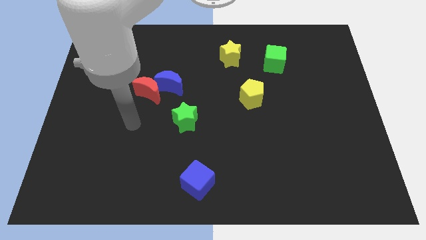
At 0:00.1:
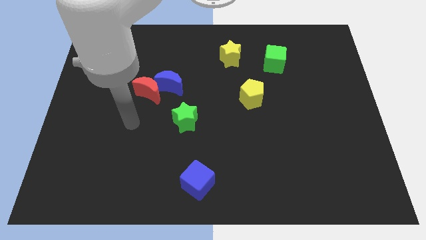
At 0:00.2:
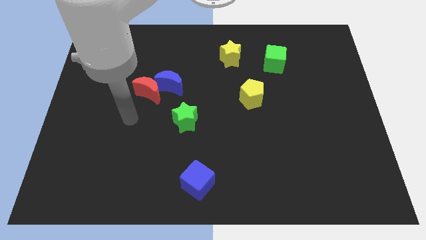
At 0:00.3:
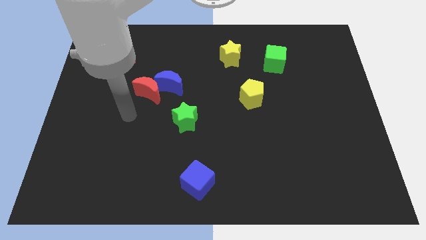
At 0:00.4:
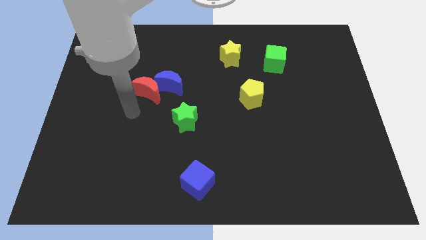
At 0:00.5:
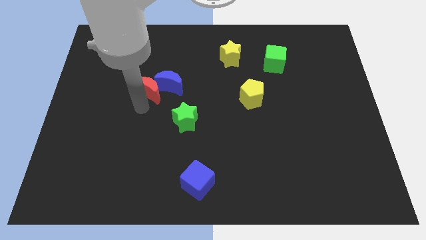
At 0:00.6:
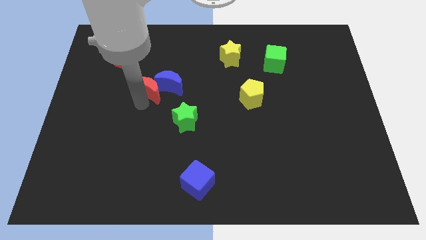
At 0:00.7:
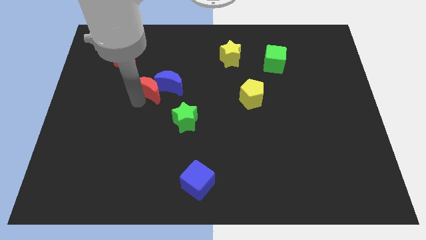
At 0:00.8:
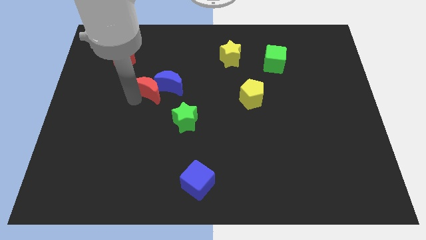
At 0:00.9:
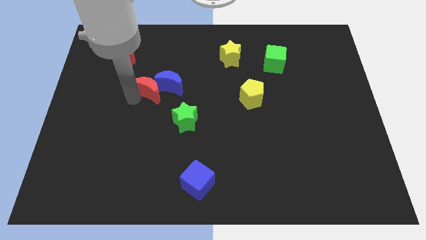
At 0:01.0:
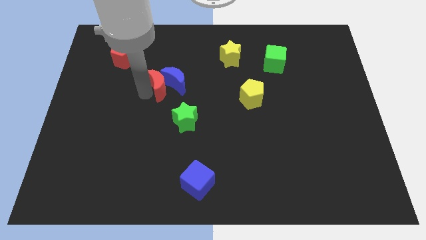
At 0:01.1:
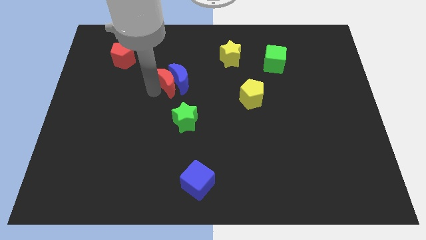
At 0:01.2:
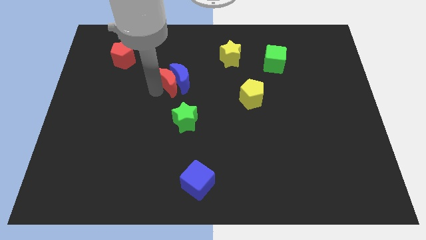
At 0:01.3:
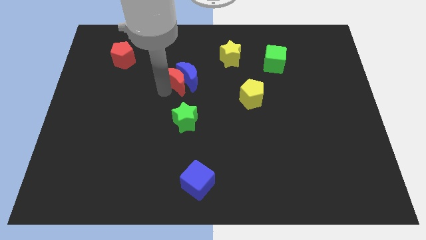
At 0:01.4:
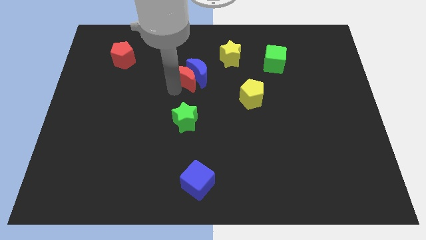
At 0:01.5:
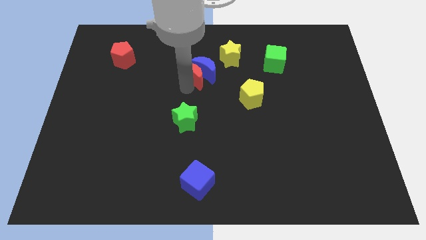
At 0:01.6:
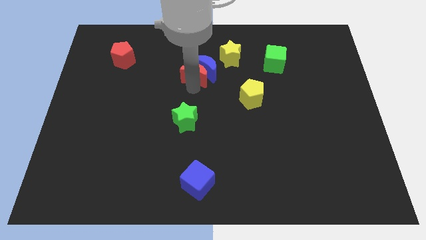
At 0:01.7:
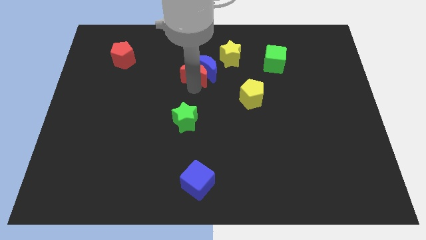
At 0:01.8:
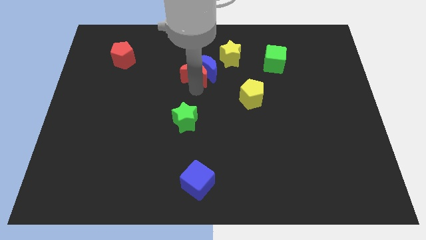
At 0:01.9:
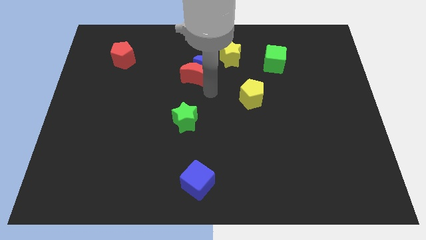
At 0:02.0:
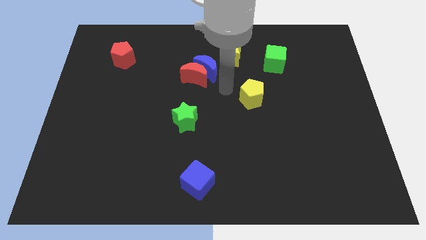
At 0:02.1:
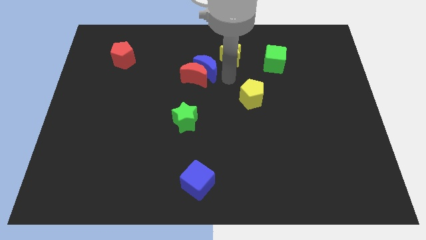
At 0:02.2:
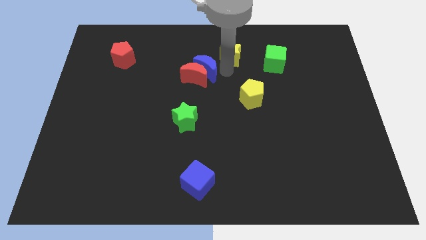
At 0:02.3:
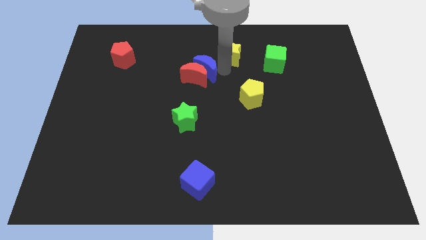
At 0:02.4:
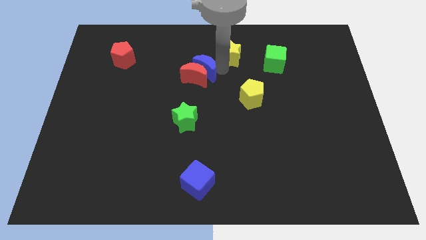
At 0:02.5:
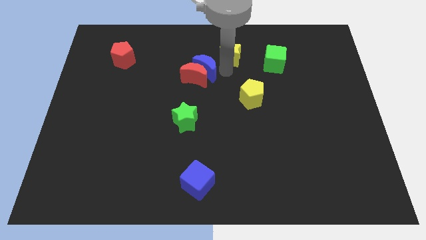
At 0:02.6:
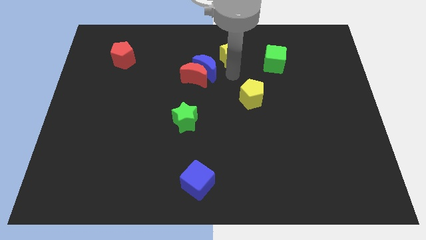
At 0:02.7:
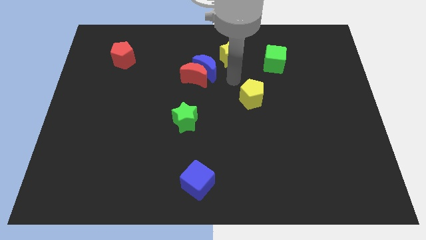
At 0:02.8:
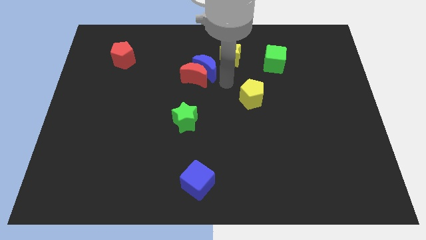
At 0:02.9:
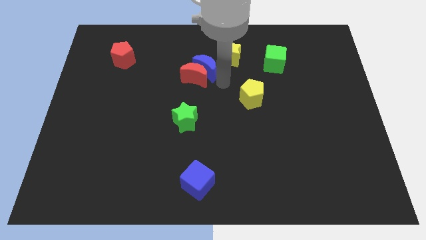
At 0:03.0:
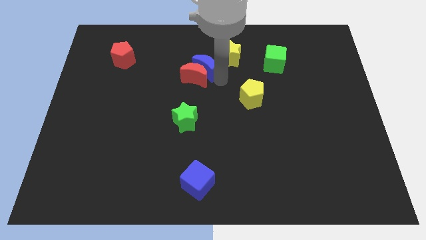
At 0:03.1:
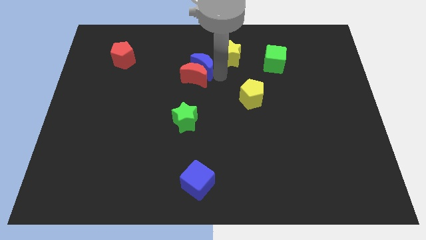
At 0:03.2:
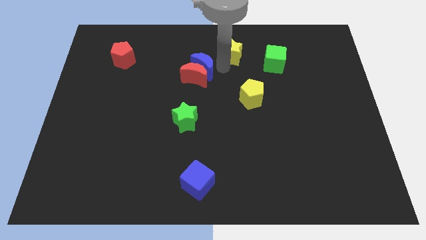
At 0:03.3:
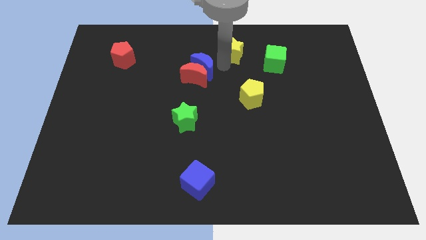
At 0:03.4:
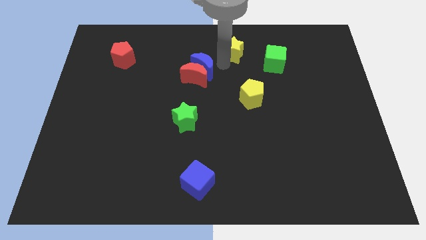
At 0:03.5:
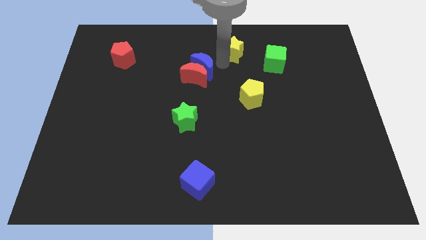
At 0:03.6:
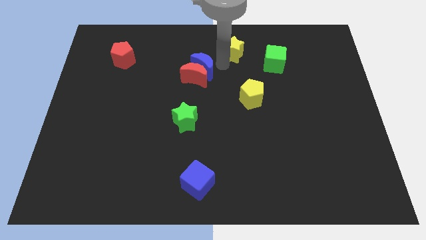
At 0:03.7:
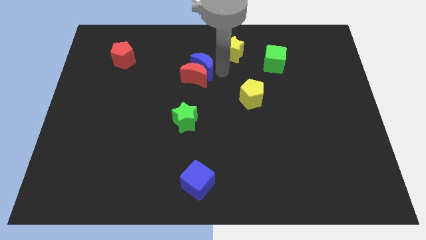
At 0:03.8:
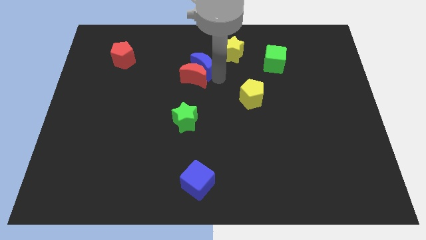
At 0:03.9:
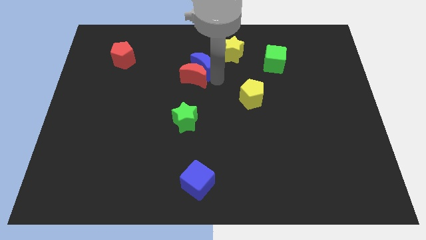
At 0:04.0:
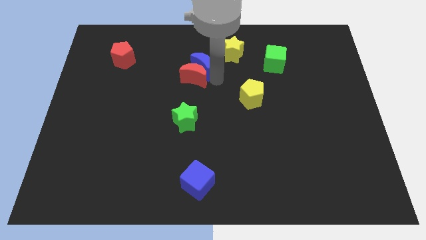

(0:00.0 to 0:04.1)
move the red crescent along with the blue crescent towards the yellow star

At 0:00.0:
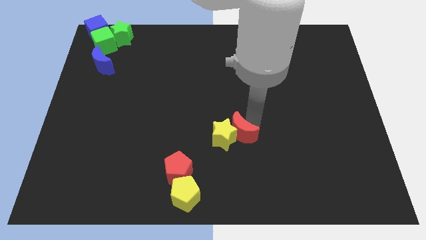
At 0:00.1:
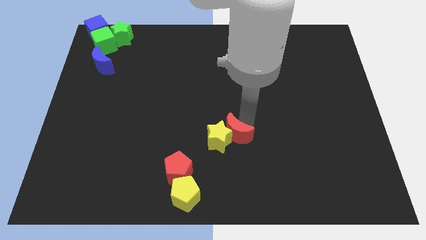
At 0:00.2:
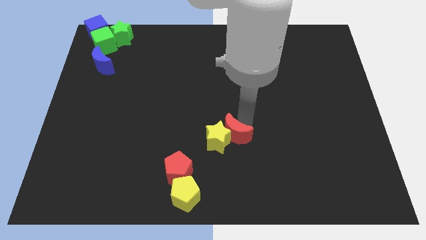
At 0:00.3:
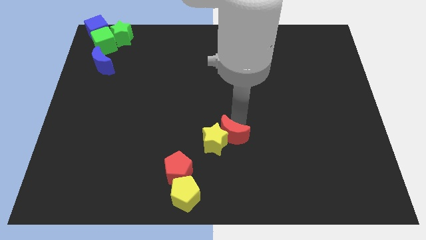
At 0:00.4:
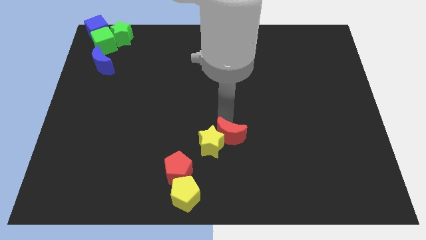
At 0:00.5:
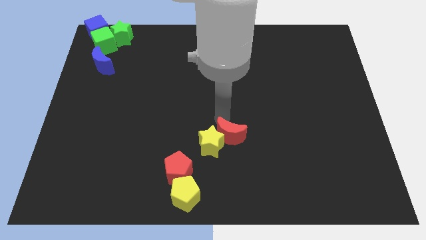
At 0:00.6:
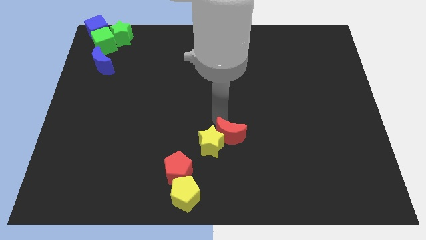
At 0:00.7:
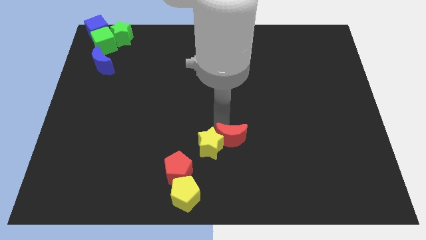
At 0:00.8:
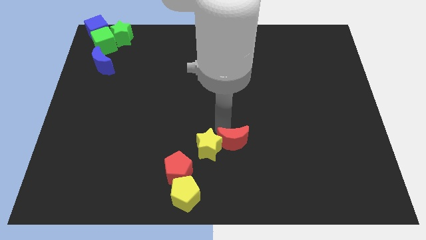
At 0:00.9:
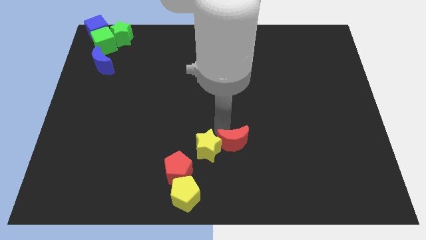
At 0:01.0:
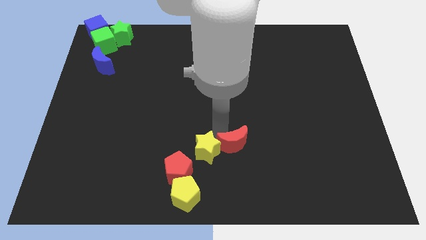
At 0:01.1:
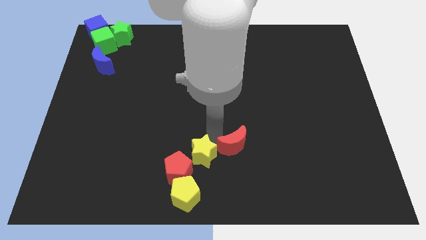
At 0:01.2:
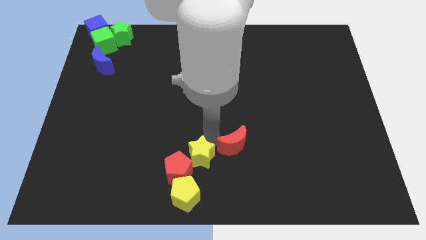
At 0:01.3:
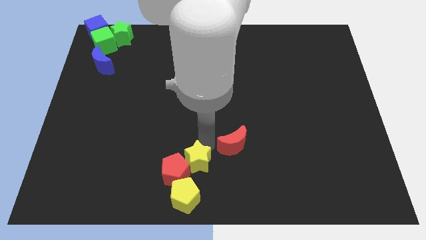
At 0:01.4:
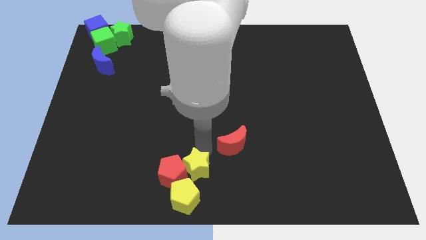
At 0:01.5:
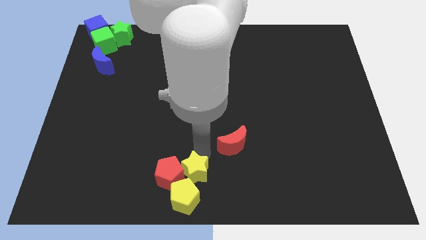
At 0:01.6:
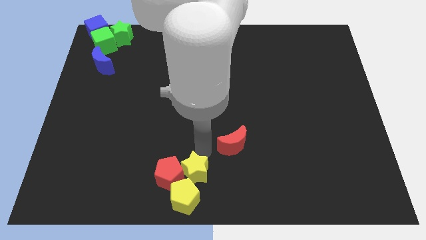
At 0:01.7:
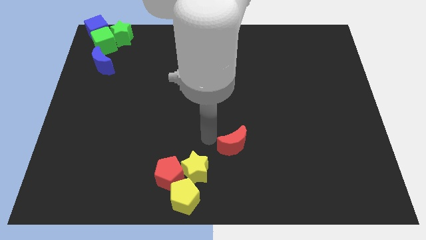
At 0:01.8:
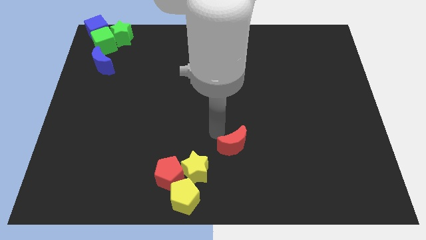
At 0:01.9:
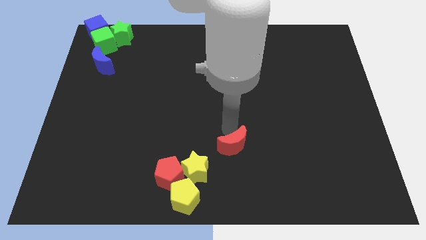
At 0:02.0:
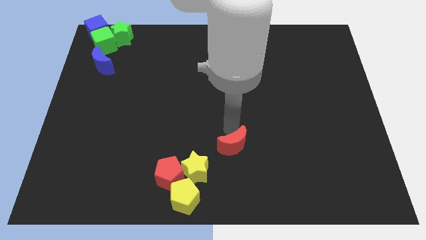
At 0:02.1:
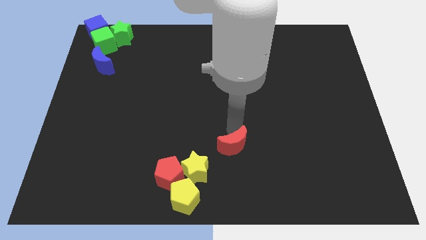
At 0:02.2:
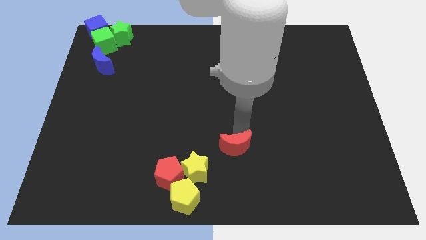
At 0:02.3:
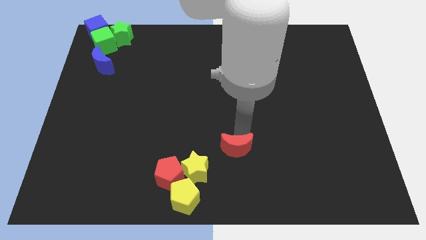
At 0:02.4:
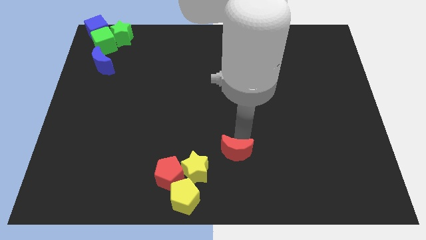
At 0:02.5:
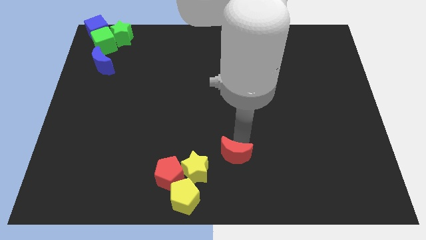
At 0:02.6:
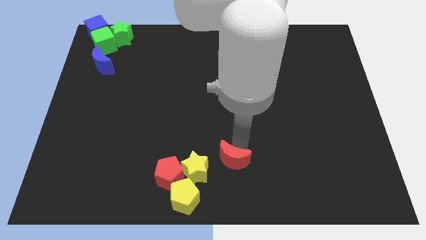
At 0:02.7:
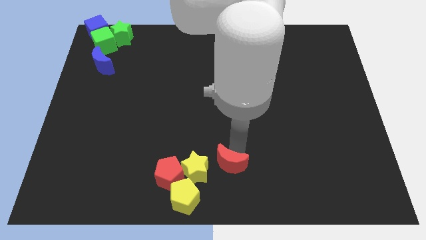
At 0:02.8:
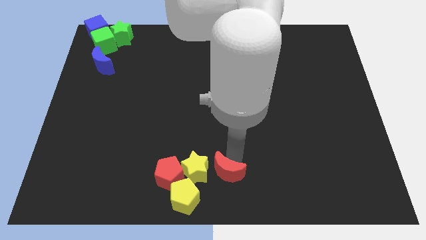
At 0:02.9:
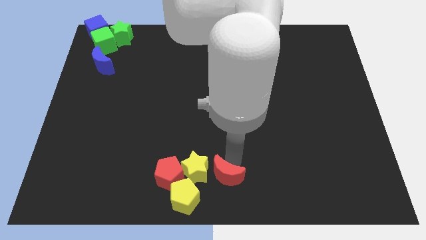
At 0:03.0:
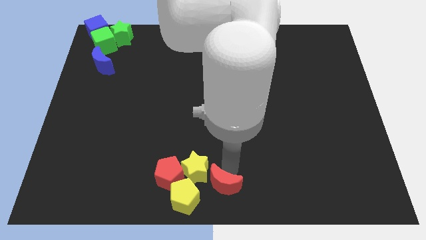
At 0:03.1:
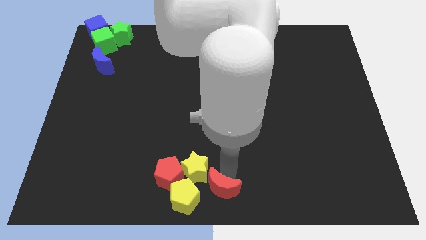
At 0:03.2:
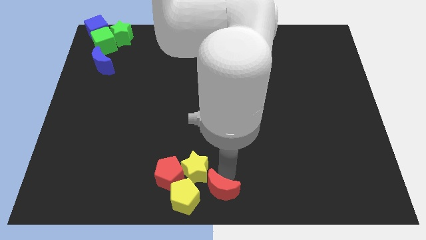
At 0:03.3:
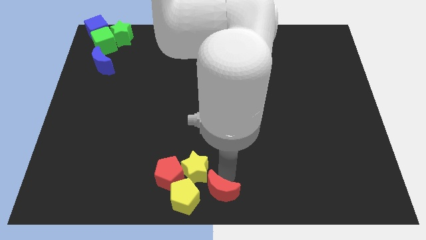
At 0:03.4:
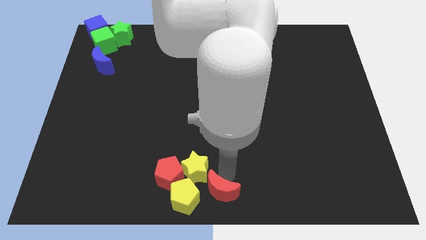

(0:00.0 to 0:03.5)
place the yellow star and red moon into the pentagons to make a group of red and yellow blocks

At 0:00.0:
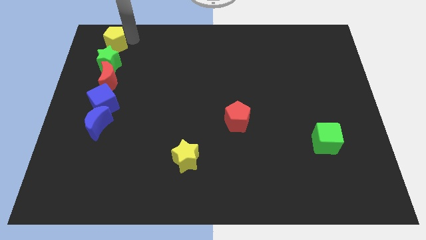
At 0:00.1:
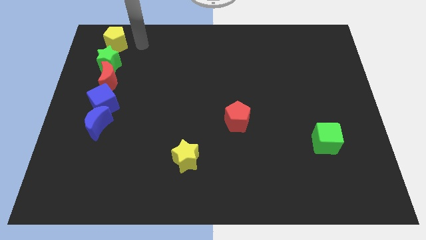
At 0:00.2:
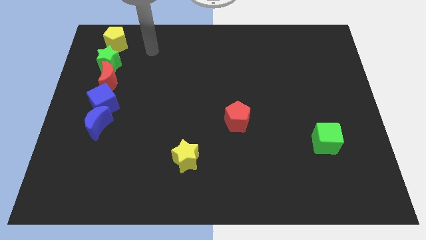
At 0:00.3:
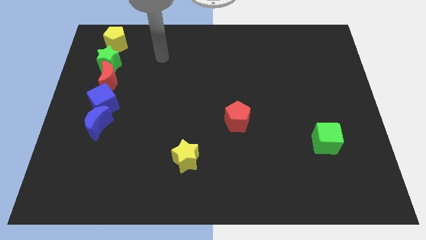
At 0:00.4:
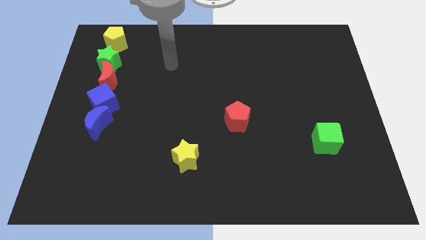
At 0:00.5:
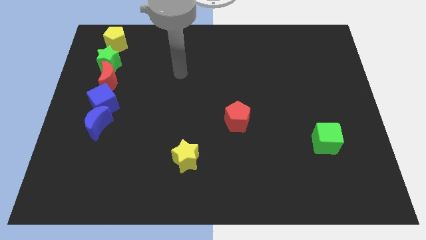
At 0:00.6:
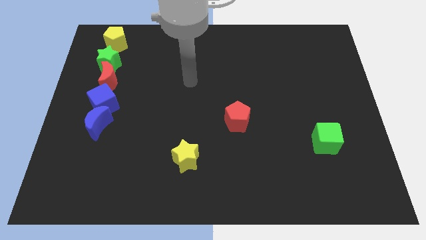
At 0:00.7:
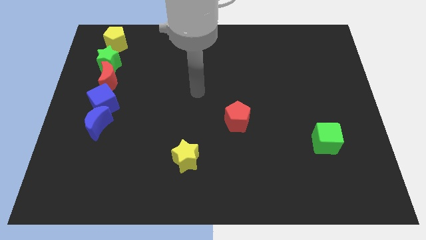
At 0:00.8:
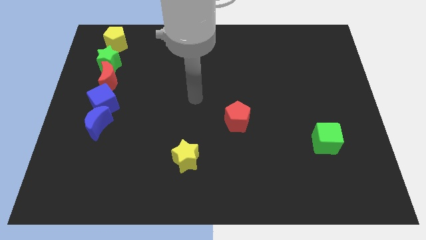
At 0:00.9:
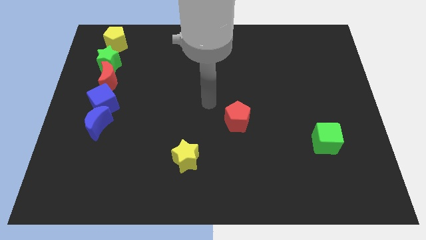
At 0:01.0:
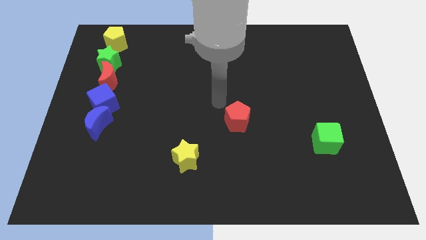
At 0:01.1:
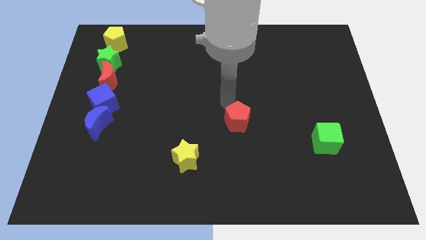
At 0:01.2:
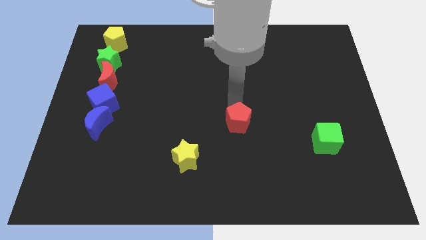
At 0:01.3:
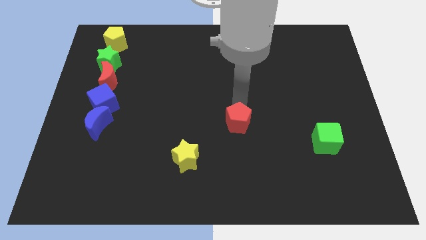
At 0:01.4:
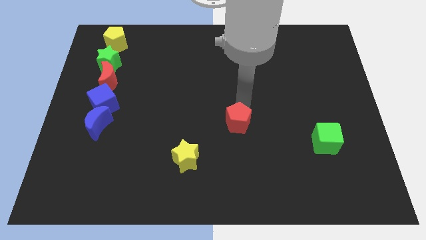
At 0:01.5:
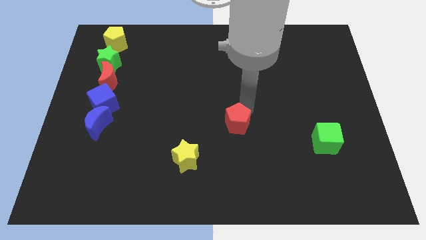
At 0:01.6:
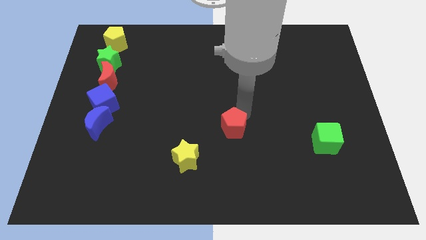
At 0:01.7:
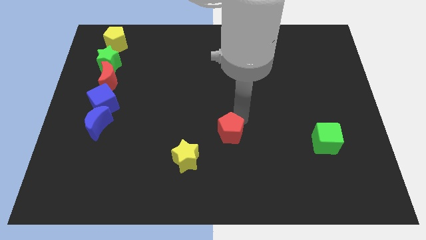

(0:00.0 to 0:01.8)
push the red pentagon towards the bottom side
